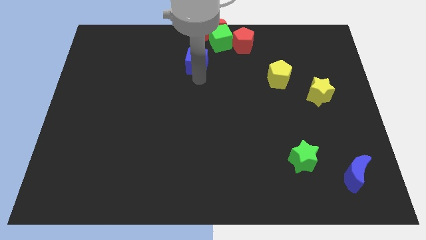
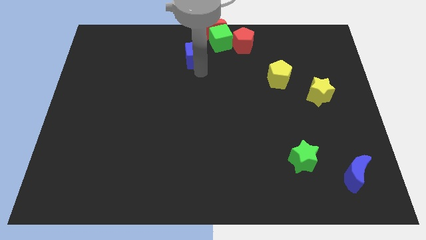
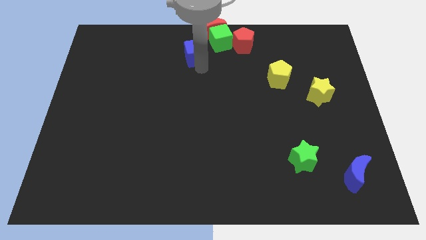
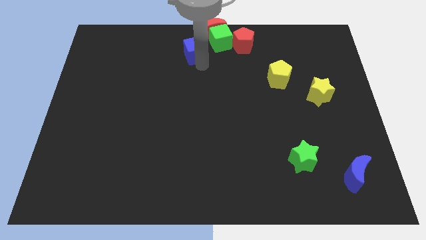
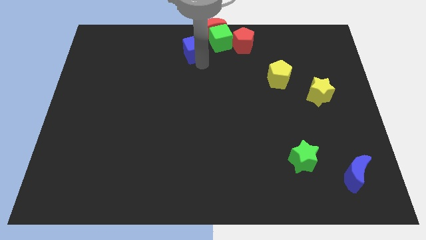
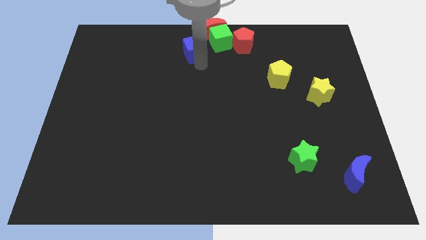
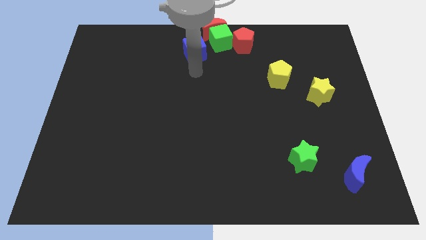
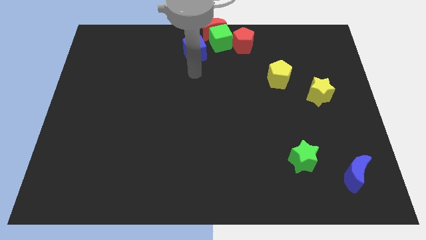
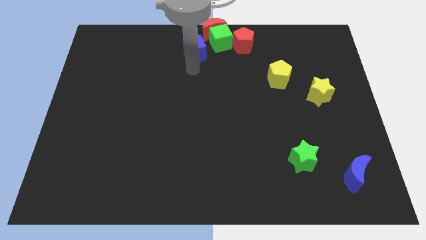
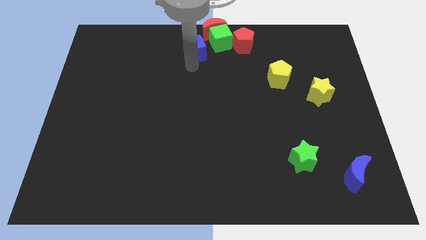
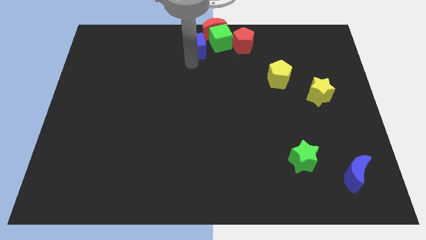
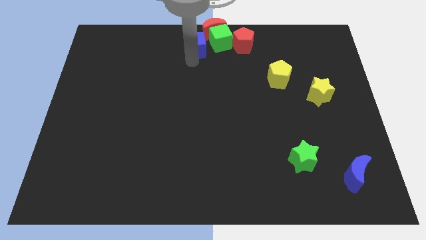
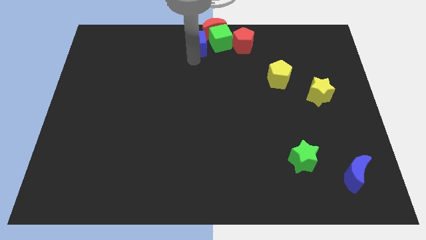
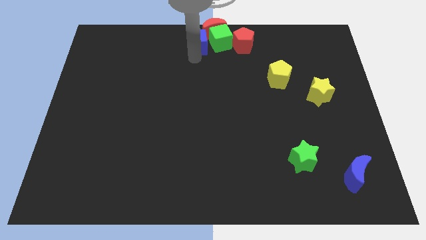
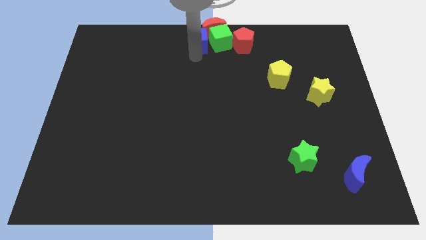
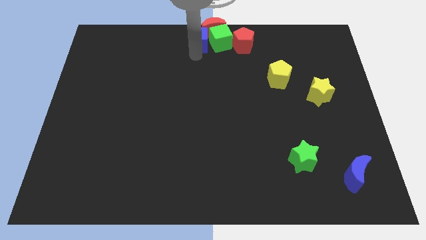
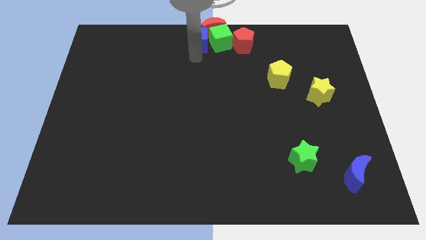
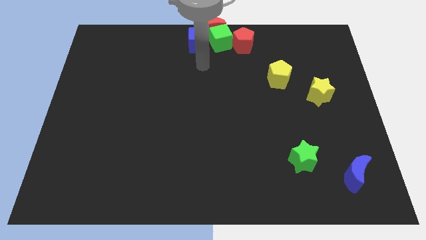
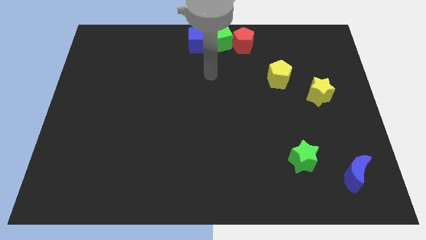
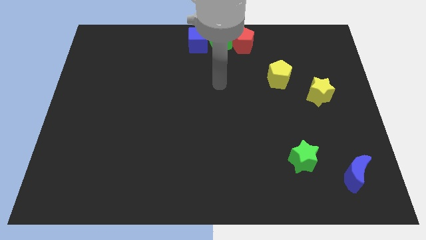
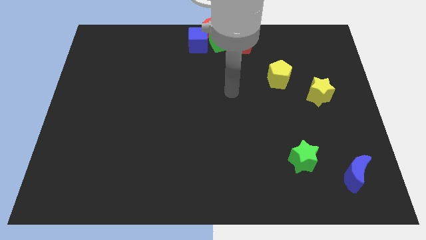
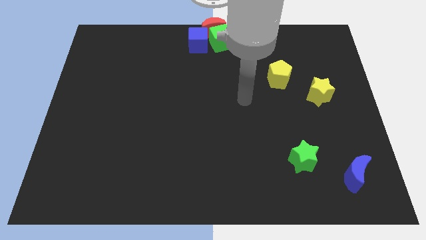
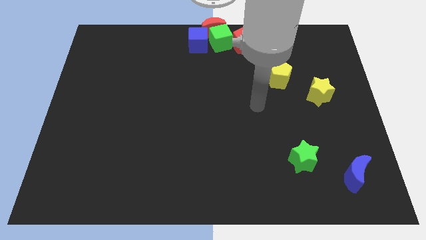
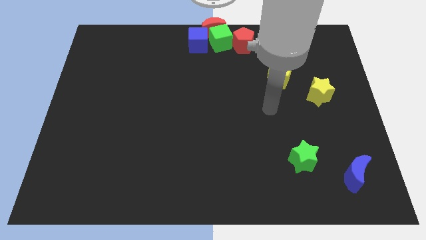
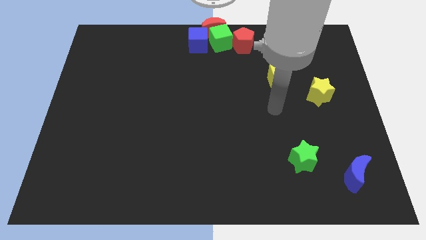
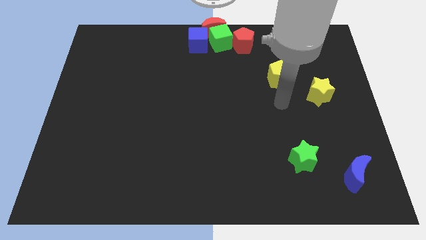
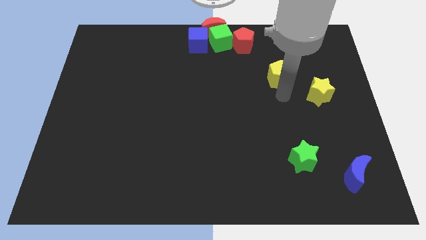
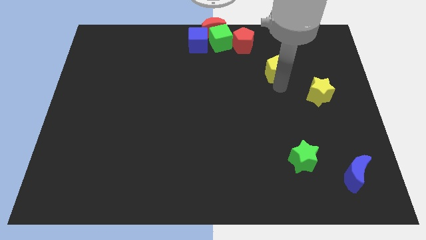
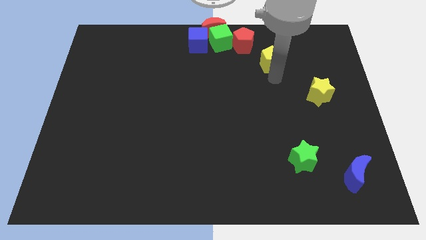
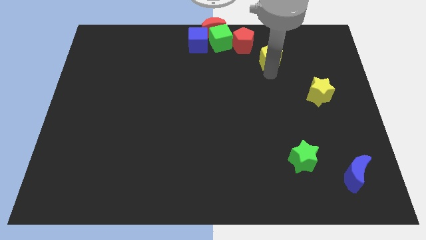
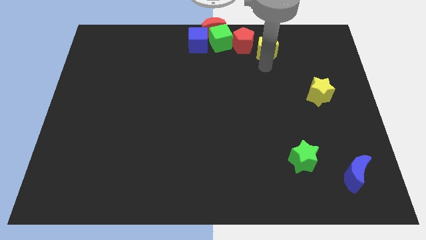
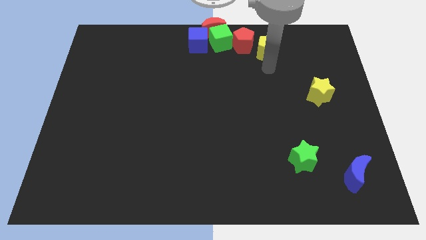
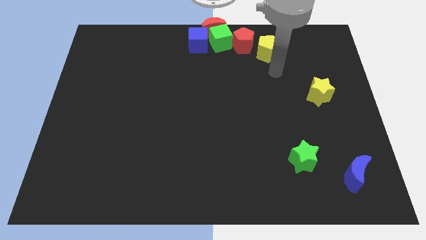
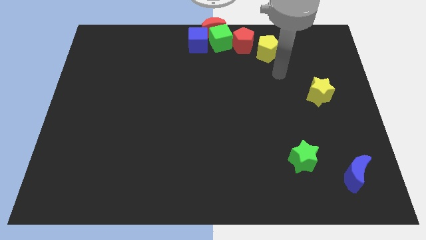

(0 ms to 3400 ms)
place the blue cube to the left of the green cube

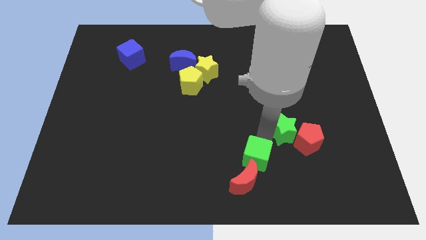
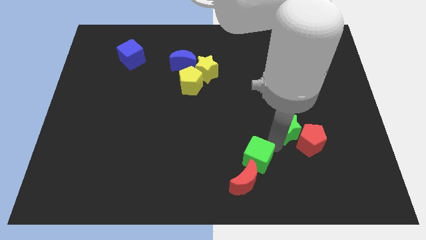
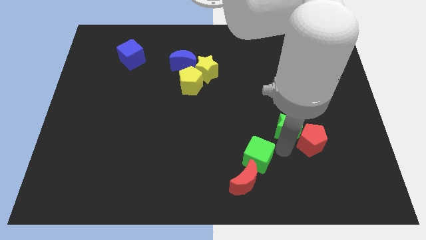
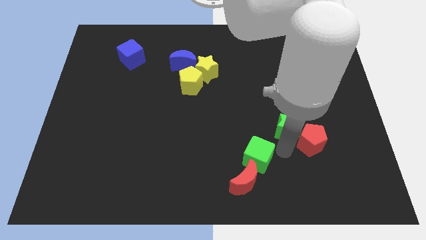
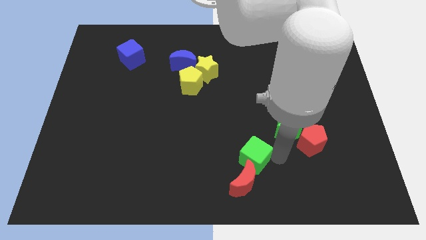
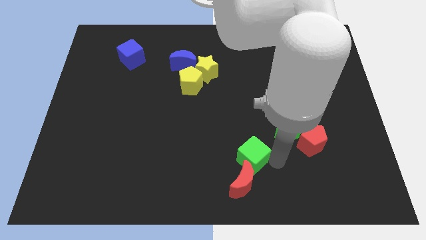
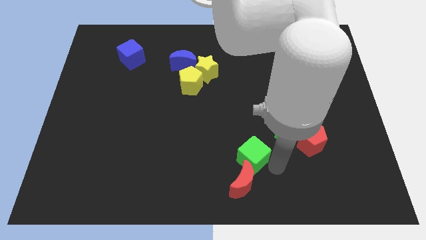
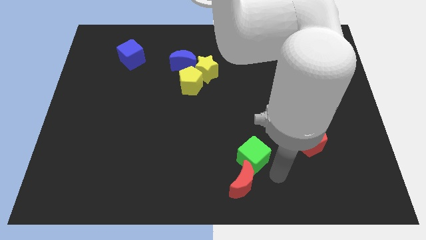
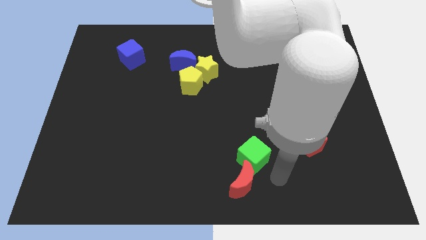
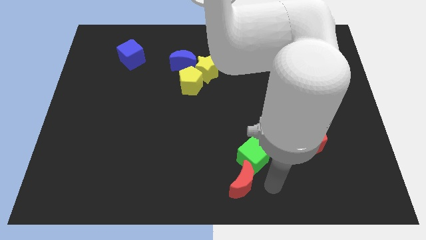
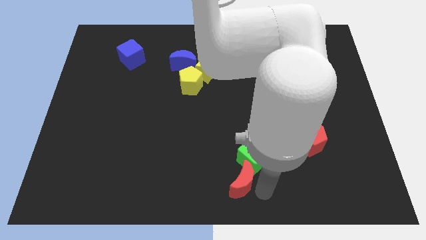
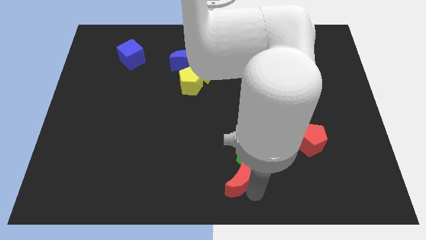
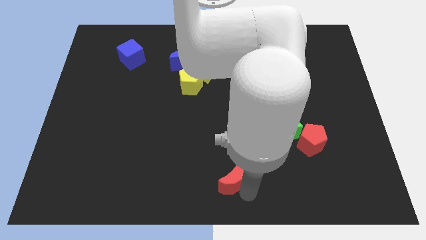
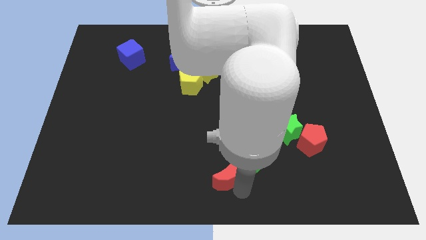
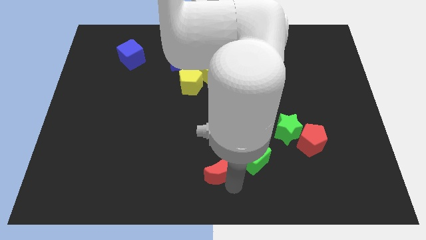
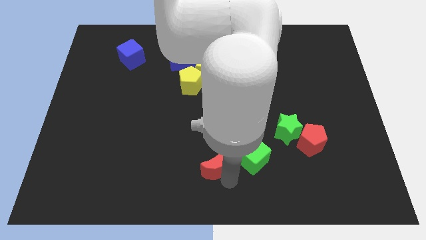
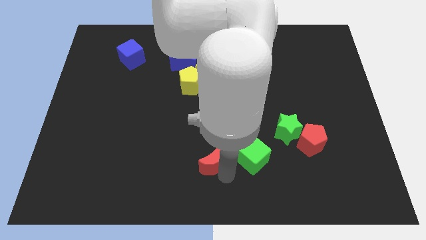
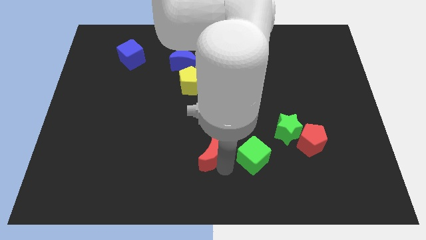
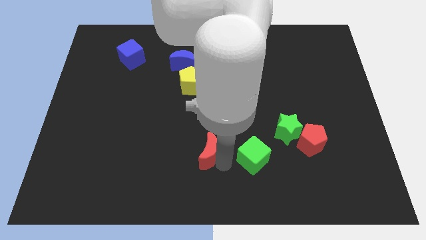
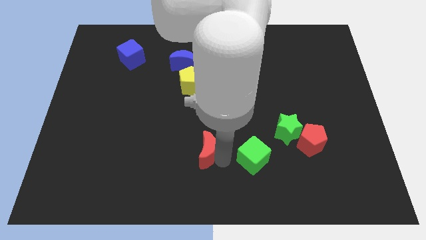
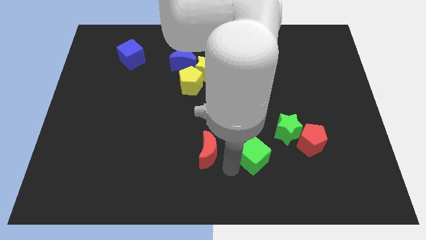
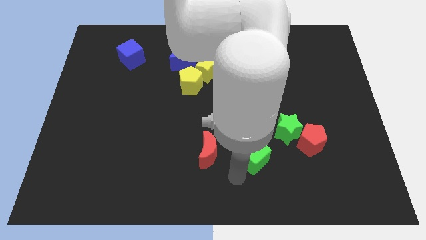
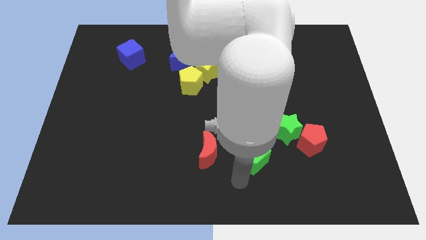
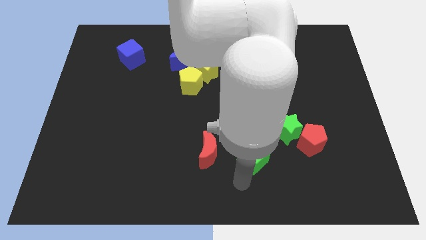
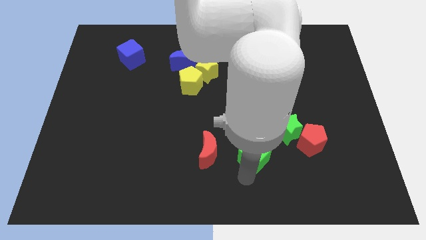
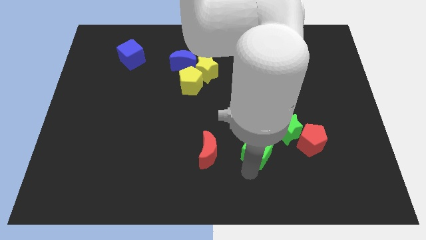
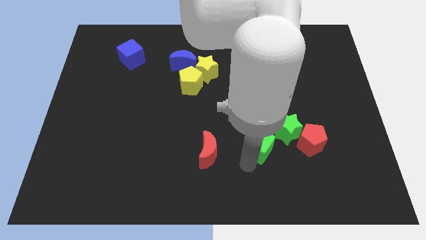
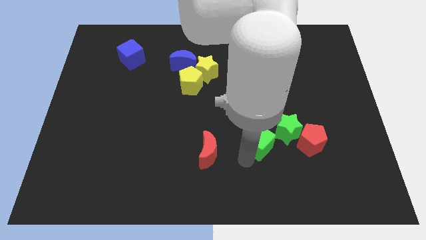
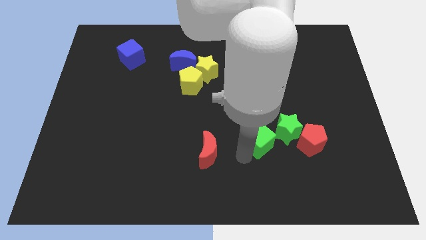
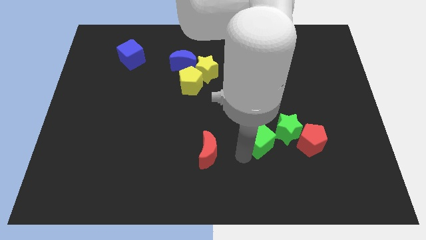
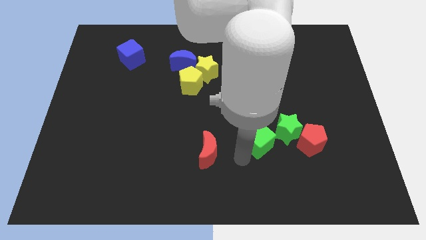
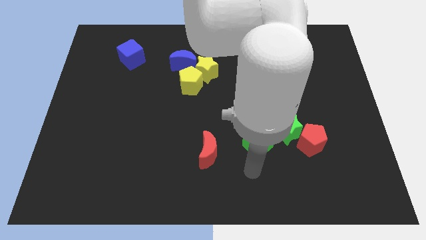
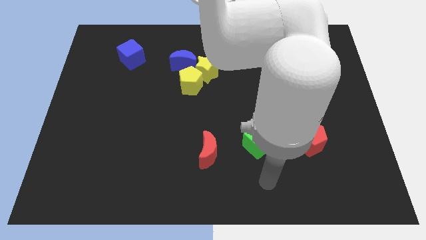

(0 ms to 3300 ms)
separate the red crescent and the green cube

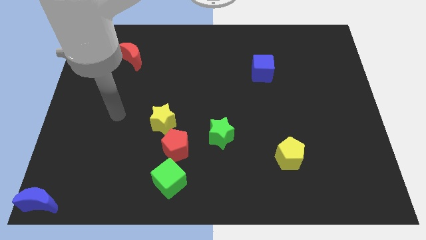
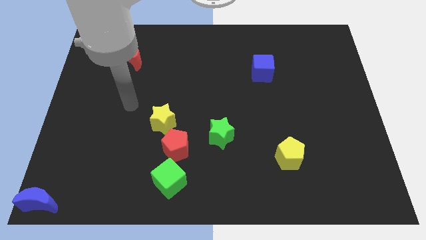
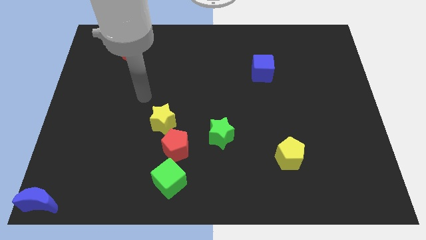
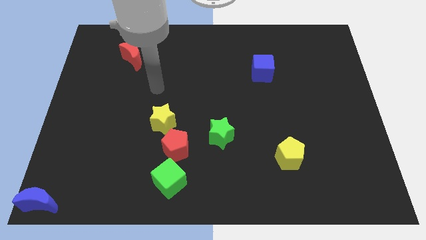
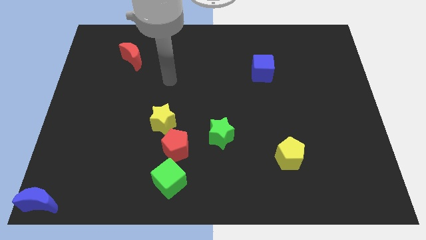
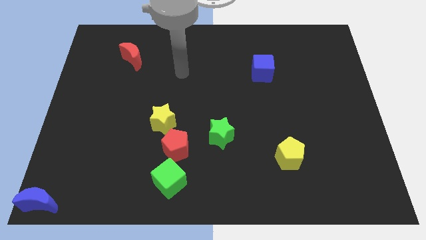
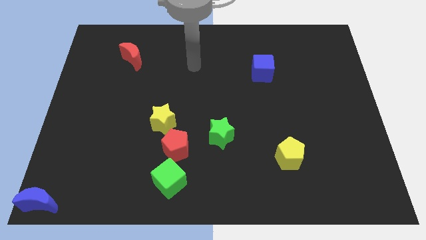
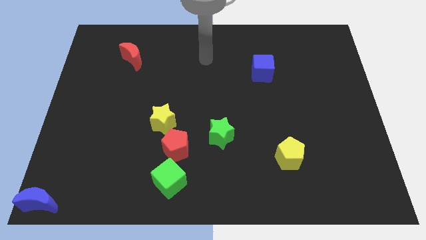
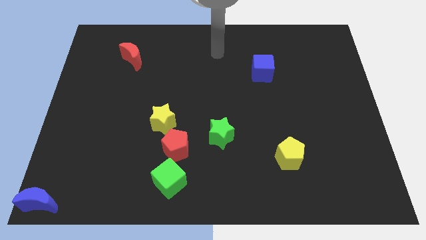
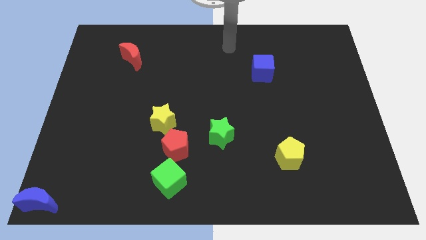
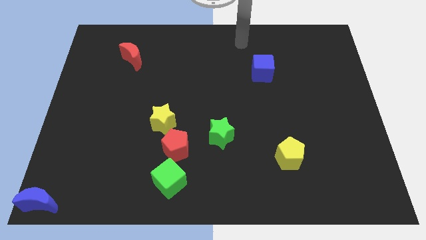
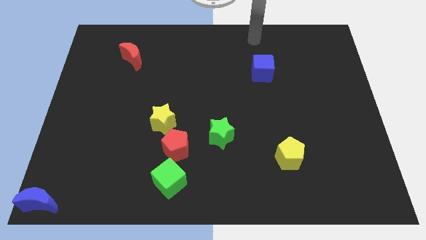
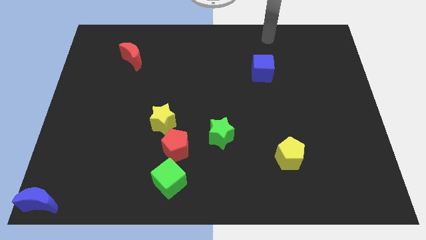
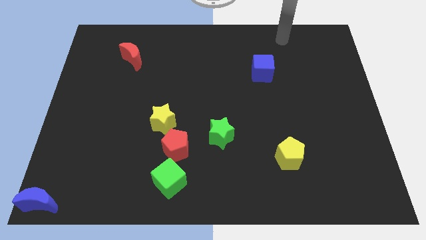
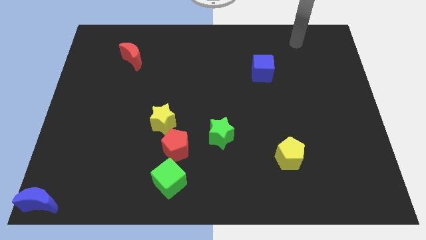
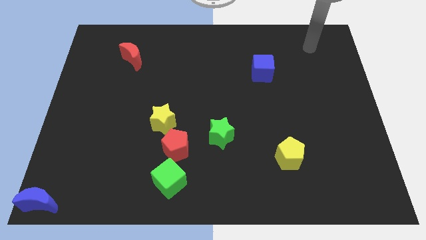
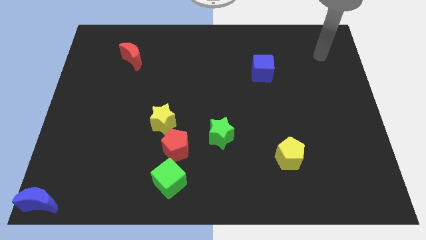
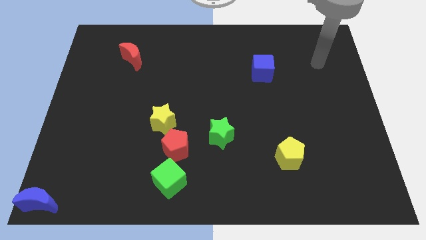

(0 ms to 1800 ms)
move your arm towards top right

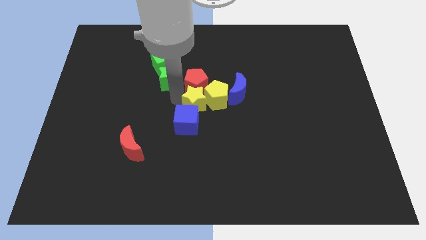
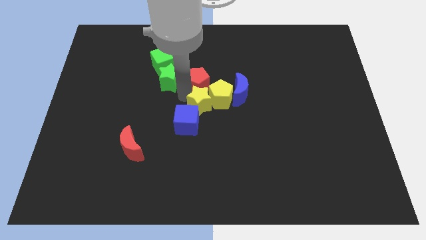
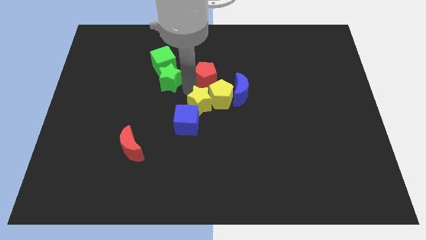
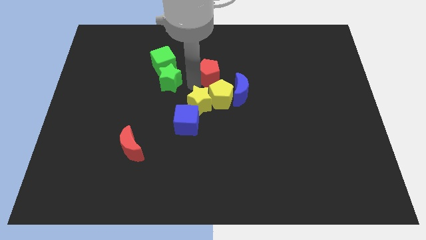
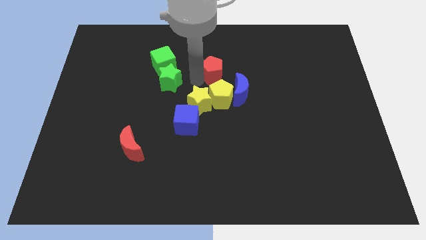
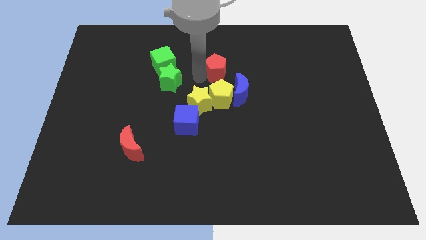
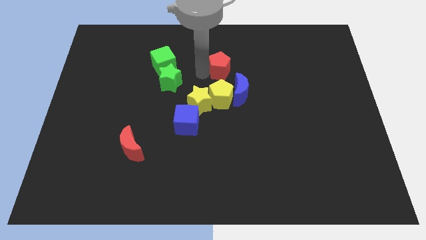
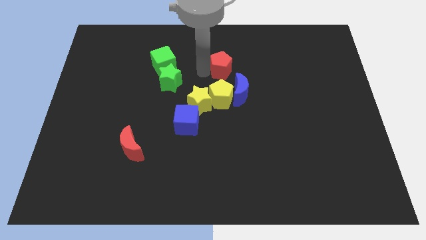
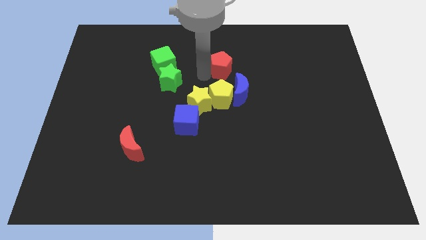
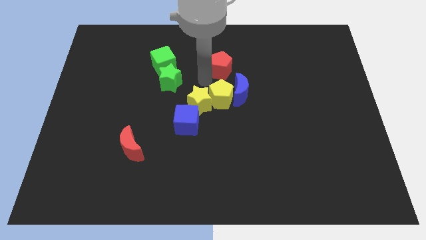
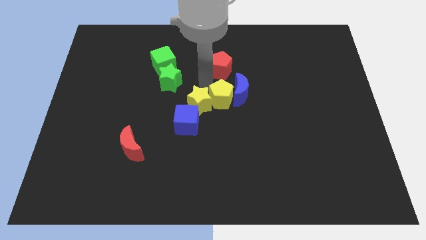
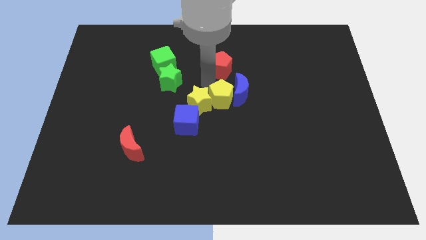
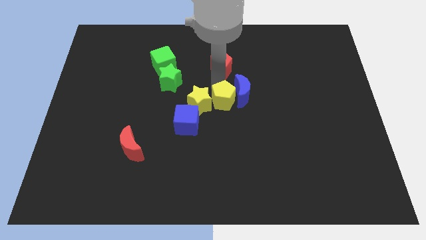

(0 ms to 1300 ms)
place the red pentagon above the yellow pentagon
